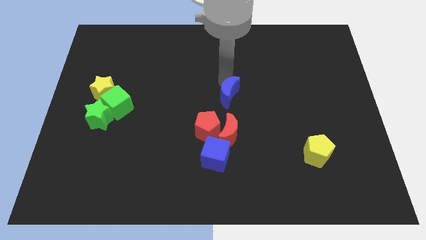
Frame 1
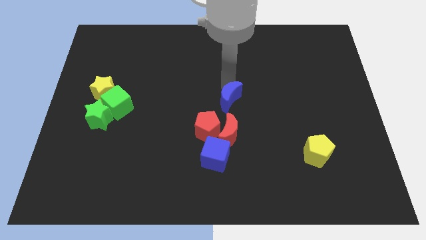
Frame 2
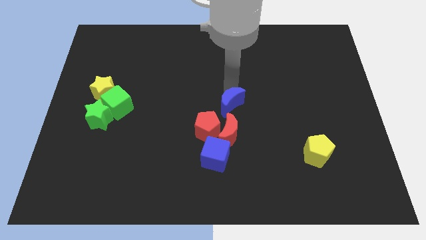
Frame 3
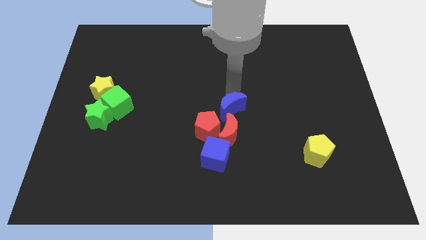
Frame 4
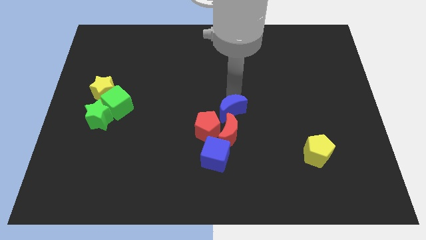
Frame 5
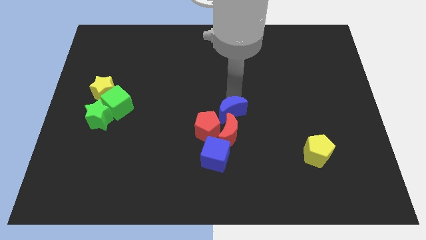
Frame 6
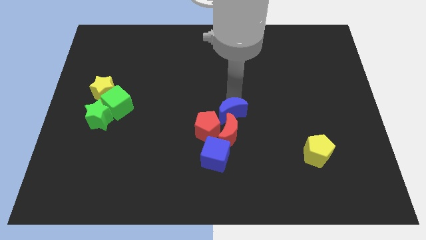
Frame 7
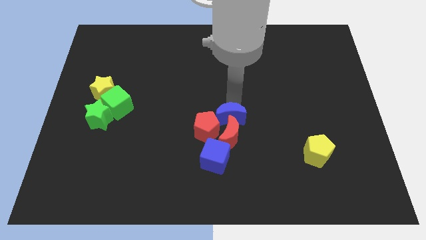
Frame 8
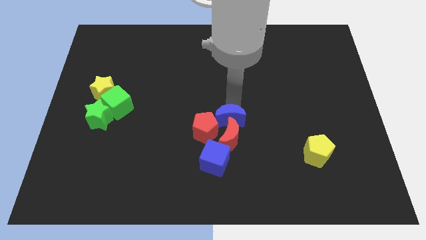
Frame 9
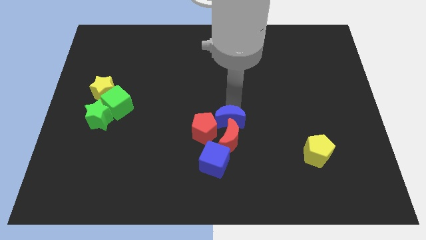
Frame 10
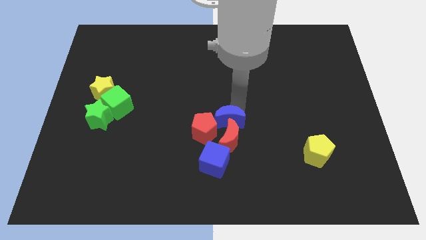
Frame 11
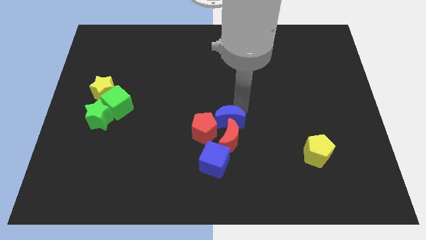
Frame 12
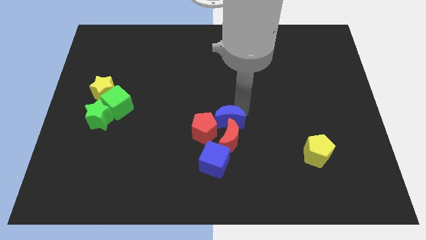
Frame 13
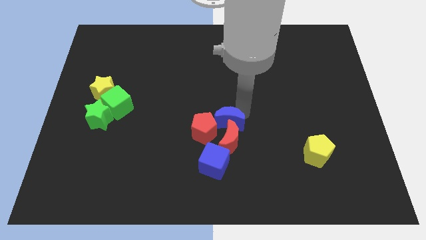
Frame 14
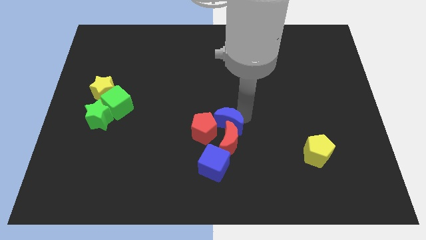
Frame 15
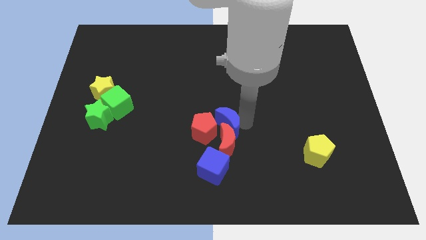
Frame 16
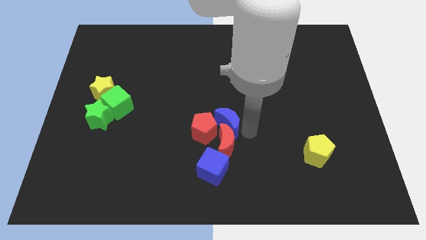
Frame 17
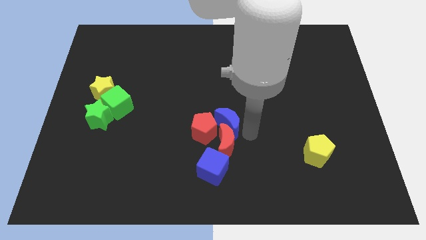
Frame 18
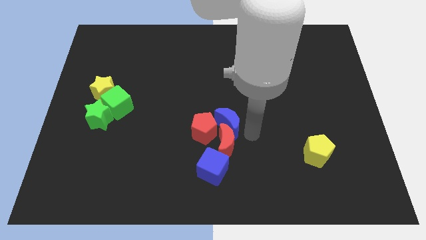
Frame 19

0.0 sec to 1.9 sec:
push the blue crescent into the red blocks

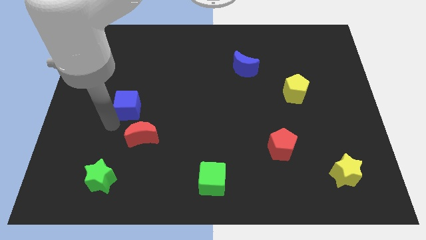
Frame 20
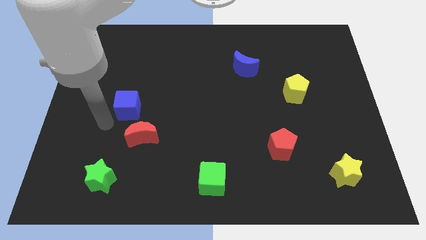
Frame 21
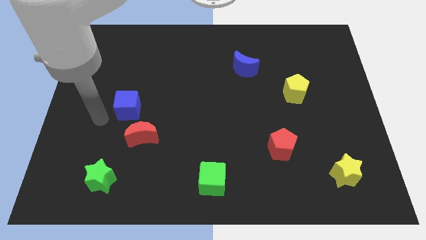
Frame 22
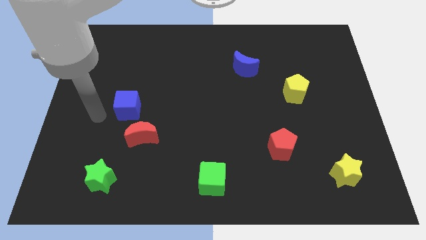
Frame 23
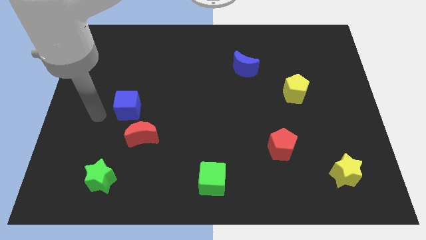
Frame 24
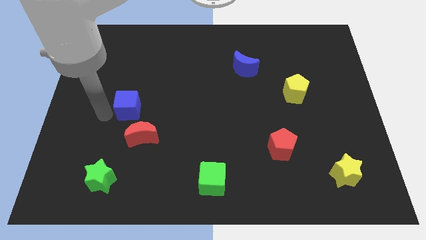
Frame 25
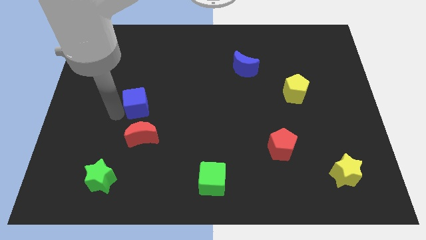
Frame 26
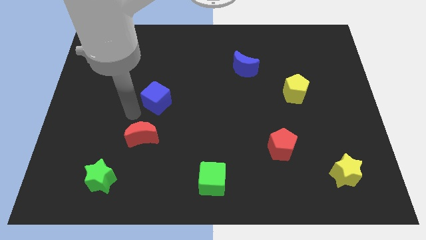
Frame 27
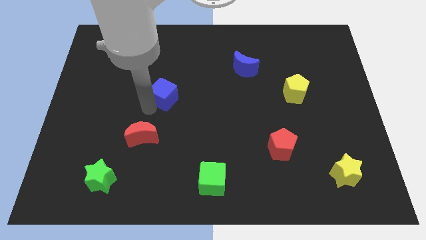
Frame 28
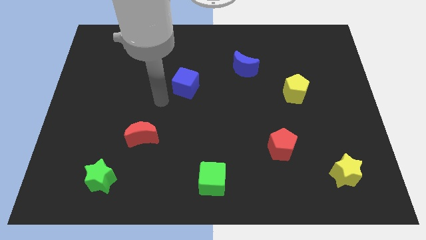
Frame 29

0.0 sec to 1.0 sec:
move the blue cube towards the blue crescent

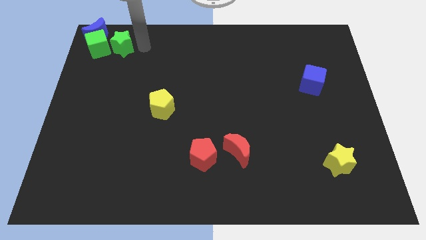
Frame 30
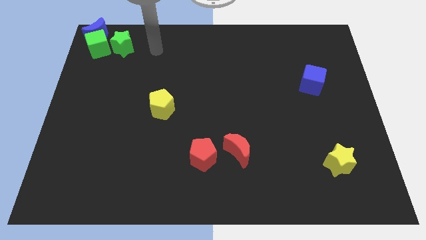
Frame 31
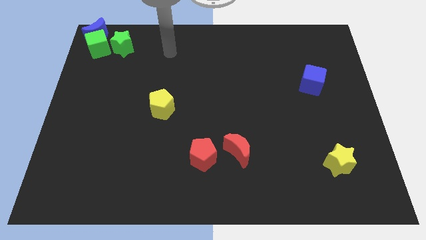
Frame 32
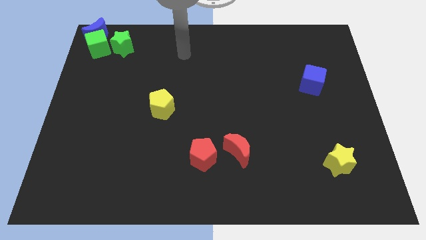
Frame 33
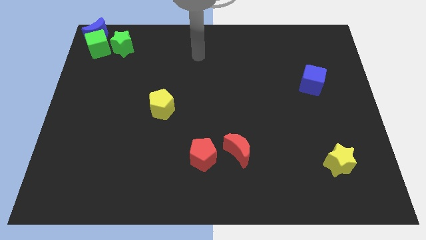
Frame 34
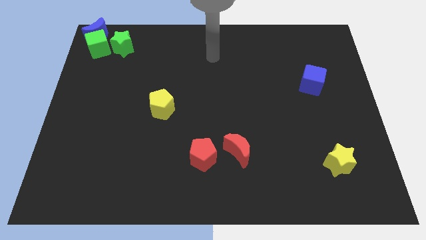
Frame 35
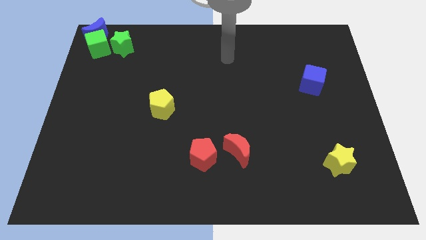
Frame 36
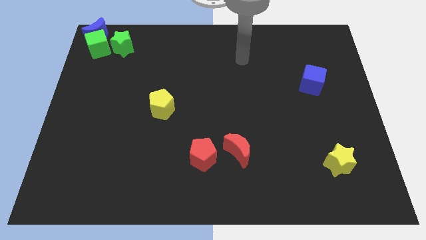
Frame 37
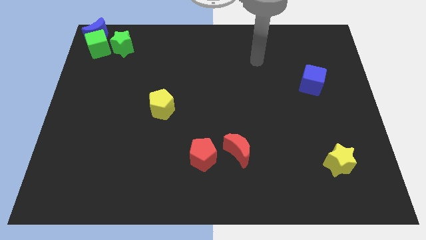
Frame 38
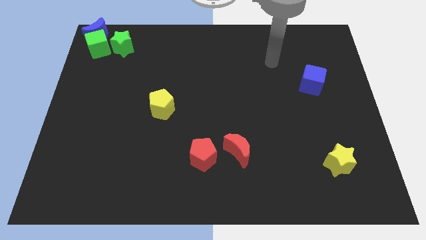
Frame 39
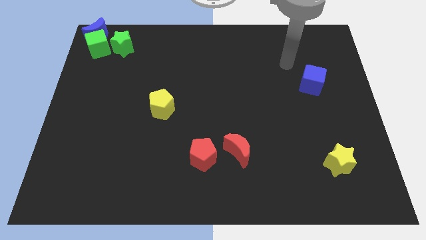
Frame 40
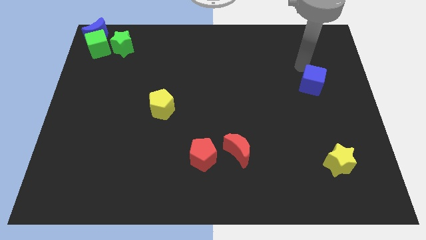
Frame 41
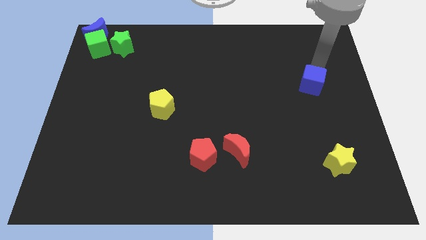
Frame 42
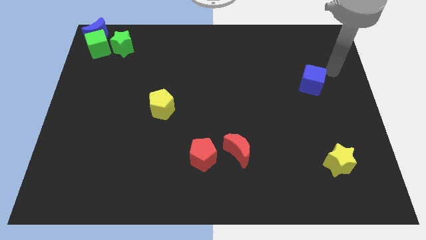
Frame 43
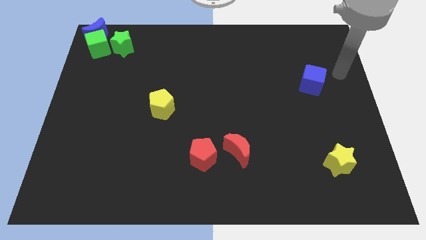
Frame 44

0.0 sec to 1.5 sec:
move the arm towards the blue cube

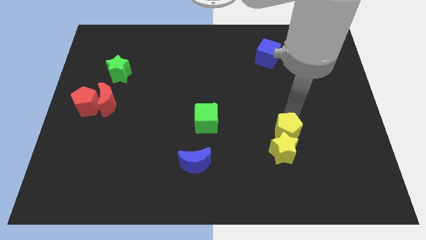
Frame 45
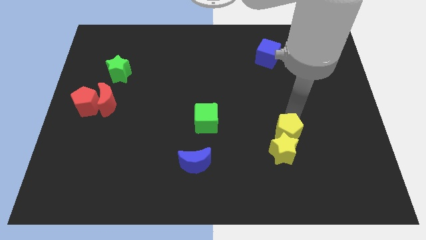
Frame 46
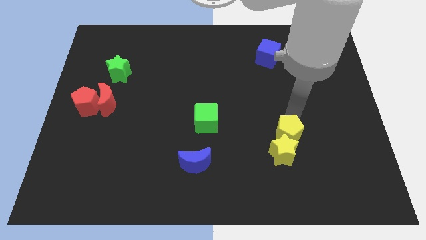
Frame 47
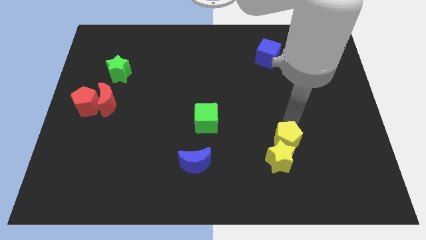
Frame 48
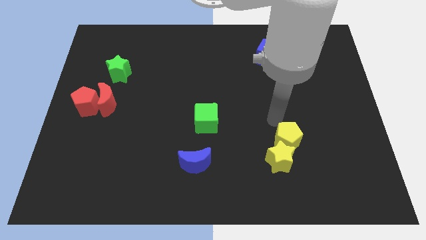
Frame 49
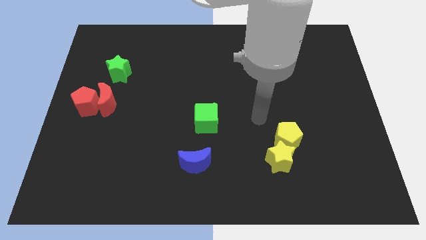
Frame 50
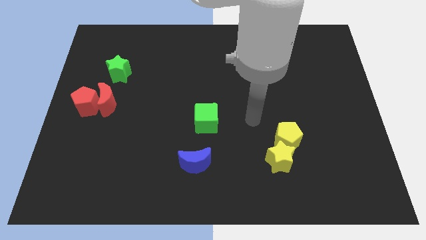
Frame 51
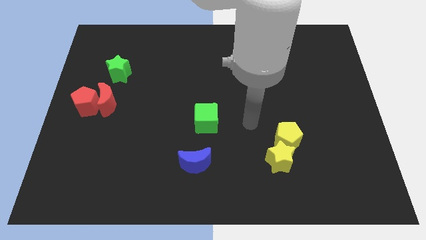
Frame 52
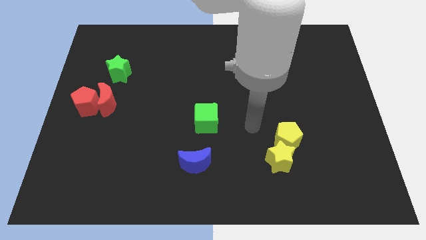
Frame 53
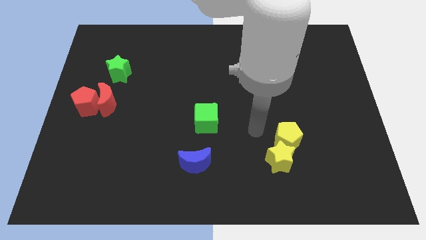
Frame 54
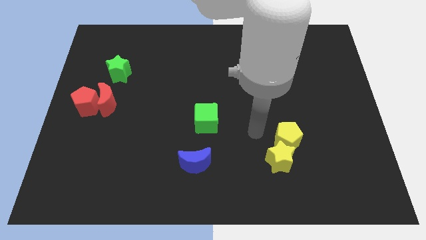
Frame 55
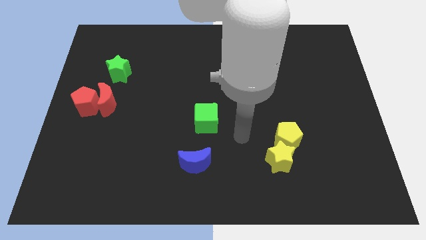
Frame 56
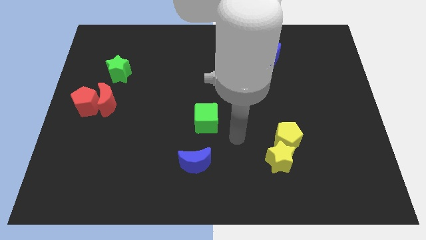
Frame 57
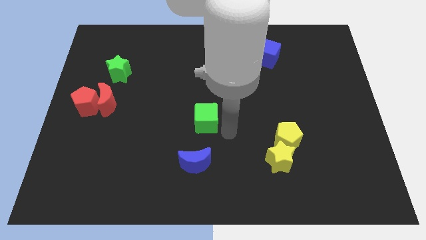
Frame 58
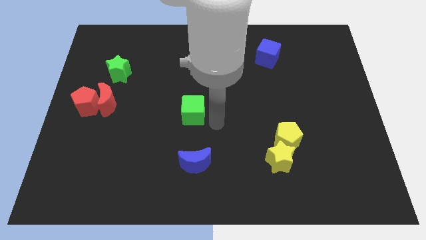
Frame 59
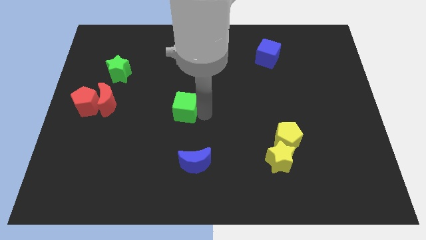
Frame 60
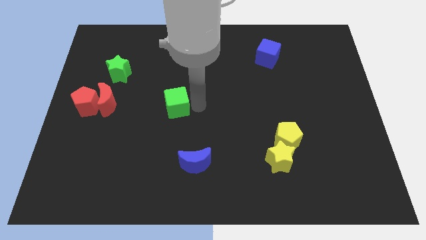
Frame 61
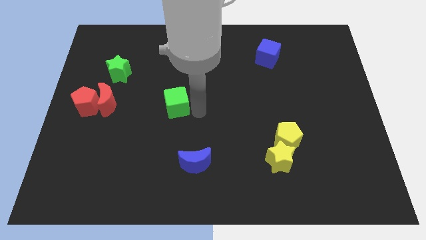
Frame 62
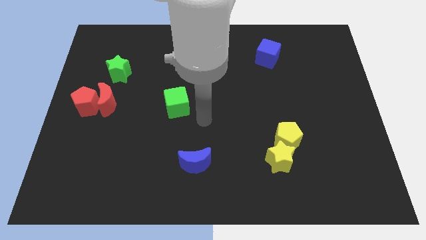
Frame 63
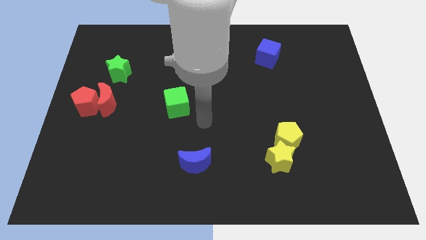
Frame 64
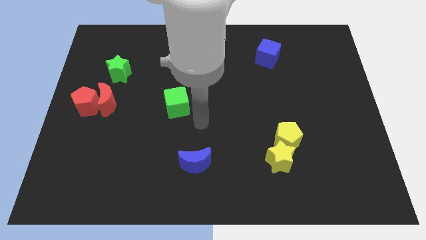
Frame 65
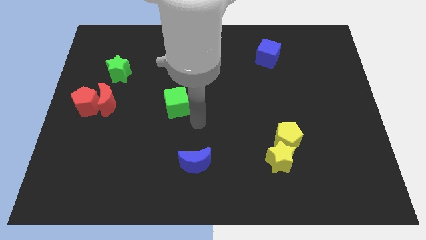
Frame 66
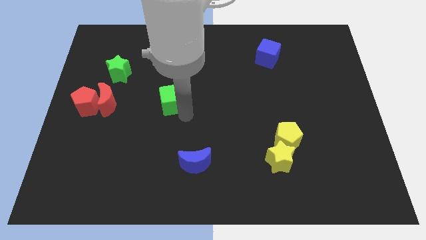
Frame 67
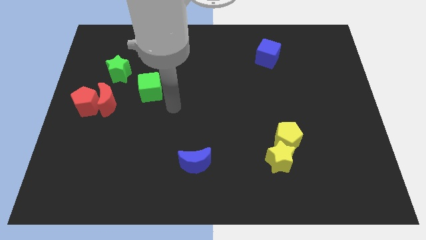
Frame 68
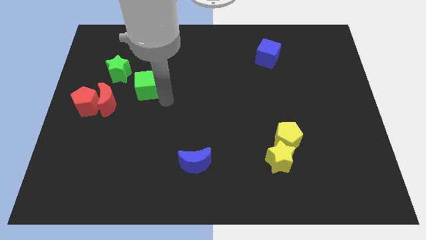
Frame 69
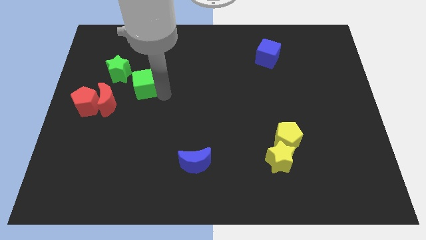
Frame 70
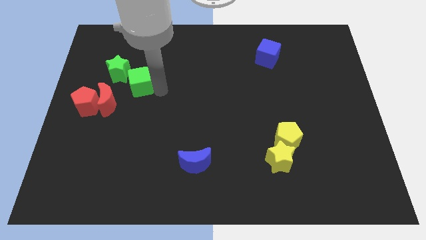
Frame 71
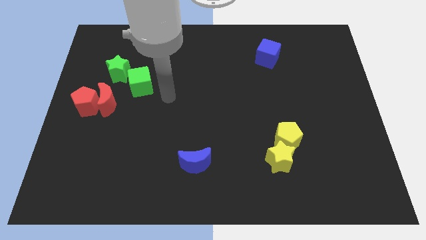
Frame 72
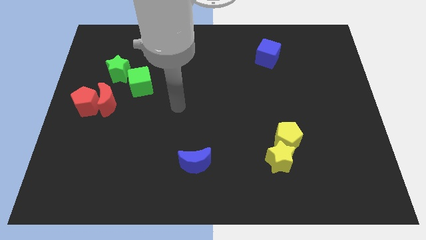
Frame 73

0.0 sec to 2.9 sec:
push the green cube into green star

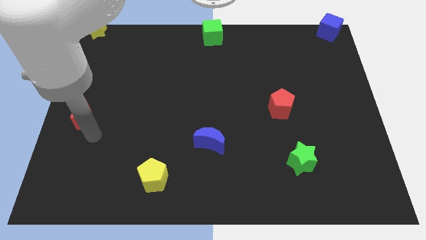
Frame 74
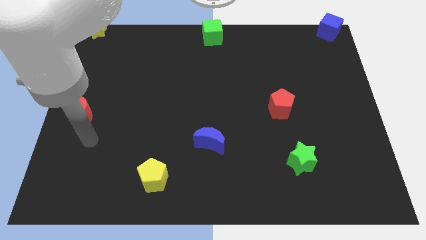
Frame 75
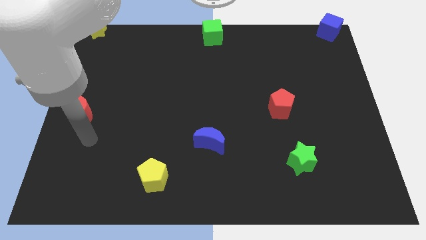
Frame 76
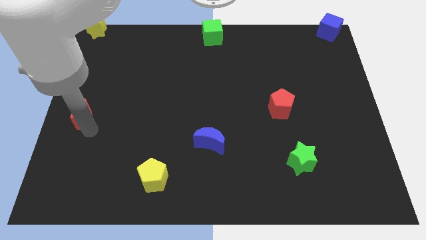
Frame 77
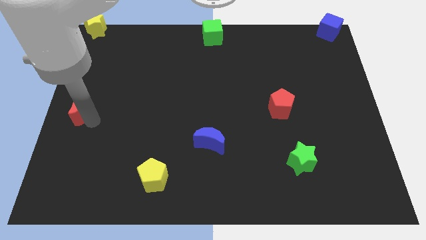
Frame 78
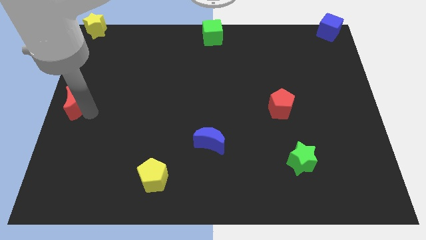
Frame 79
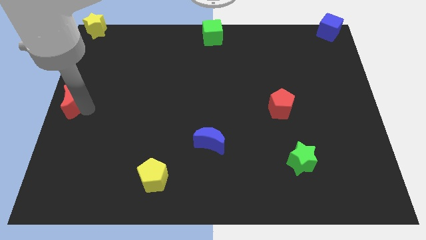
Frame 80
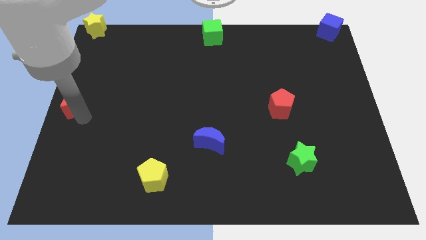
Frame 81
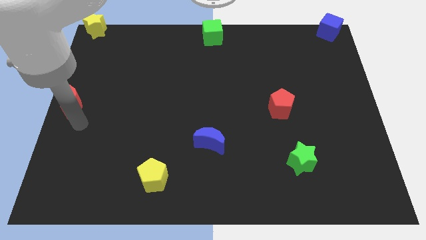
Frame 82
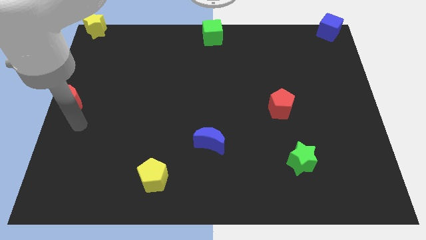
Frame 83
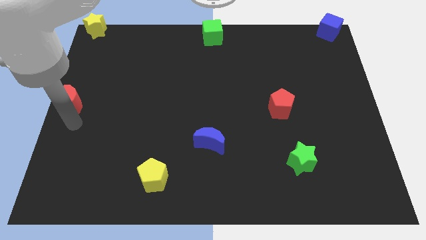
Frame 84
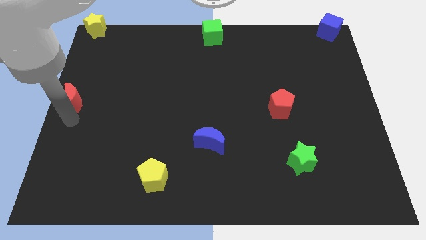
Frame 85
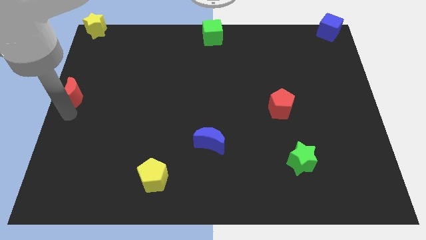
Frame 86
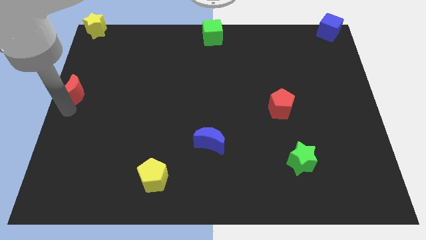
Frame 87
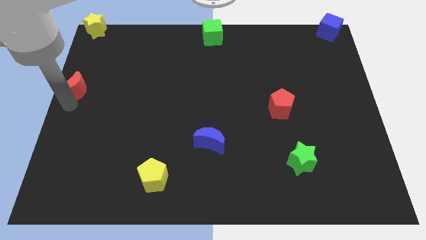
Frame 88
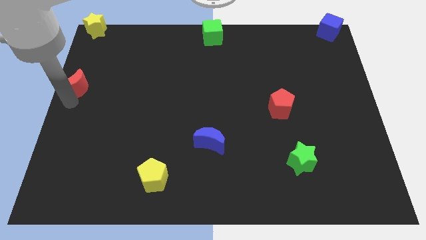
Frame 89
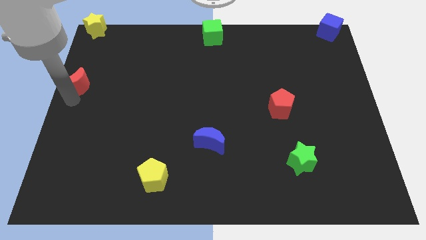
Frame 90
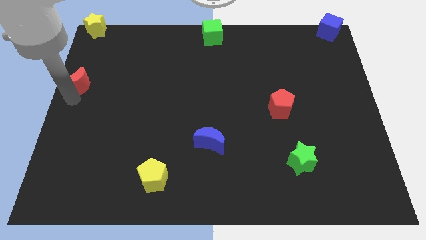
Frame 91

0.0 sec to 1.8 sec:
push red moon to the left center of the board

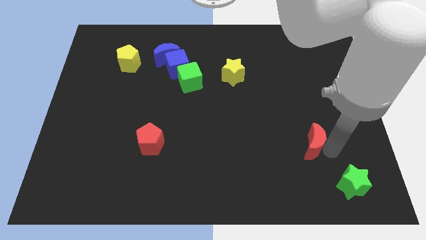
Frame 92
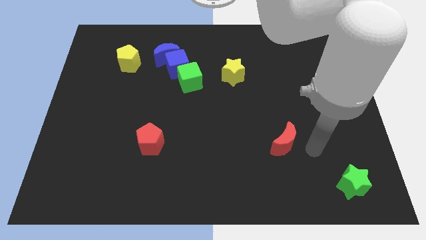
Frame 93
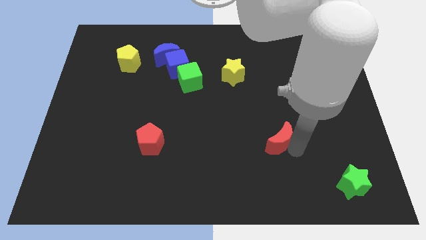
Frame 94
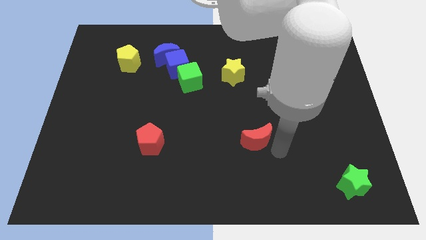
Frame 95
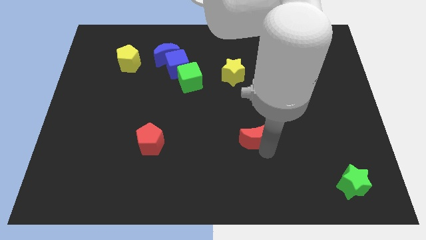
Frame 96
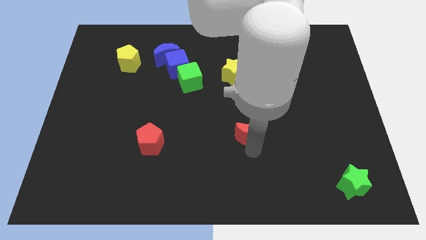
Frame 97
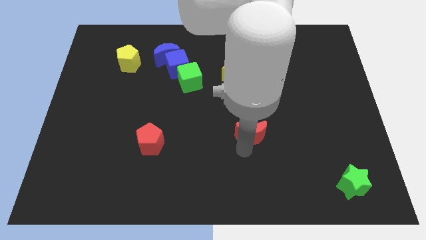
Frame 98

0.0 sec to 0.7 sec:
move the red moon down to the yellow star
